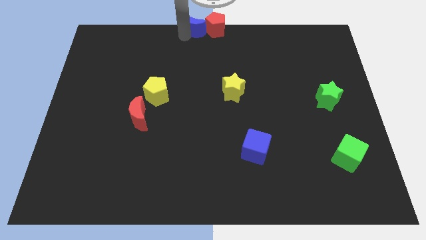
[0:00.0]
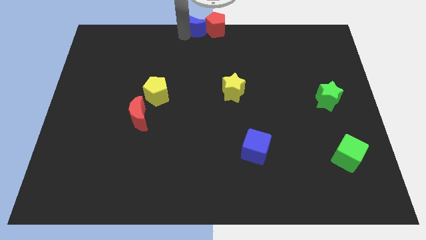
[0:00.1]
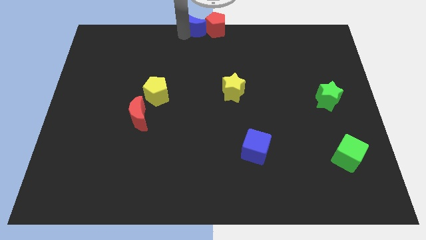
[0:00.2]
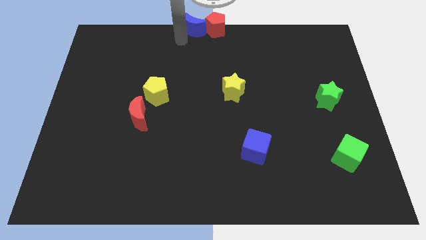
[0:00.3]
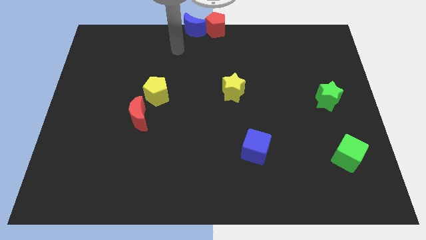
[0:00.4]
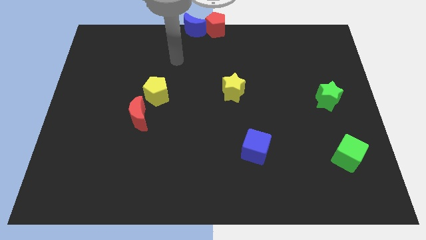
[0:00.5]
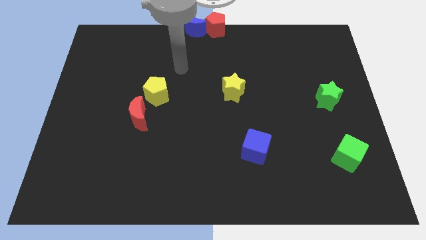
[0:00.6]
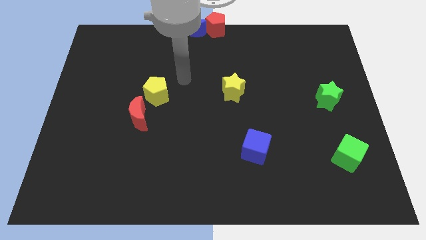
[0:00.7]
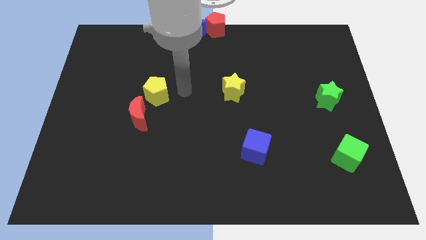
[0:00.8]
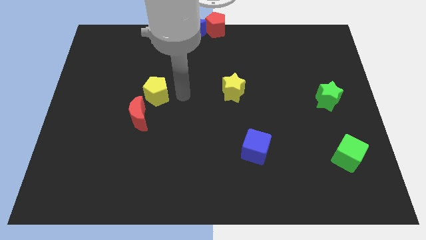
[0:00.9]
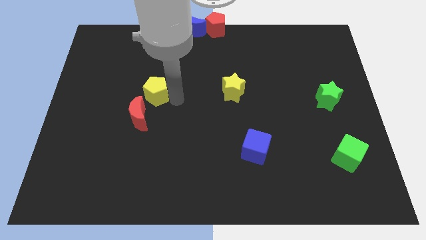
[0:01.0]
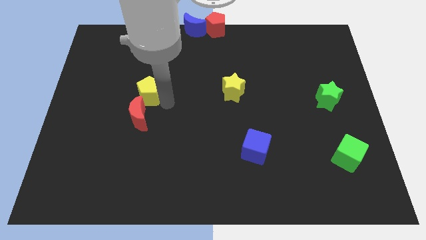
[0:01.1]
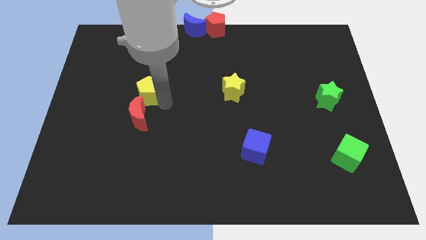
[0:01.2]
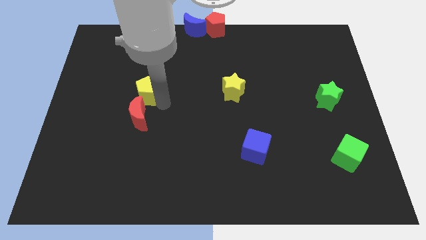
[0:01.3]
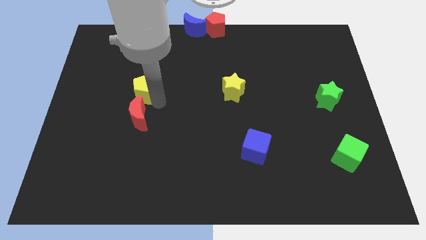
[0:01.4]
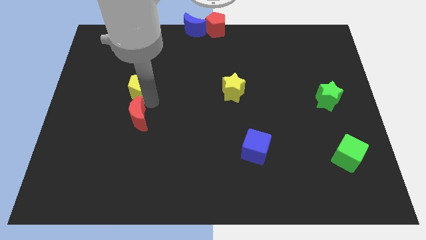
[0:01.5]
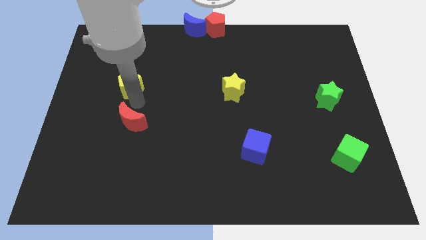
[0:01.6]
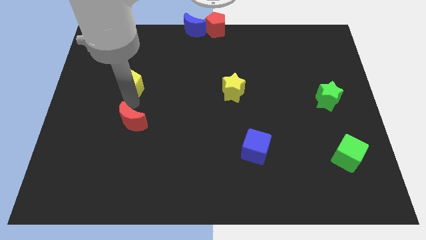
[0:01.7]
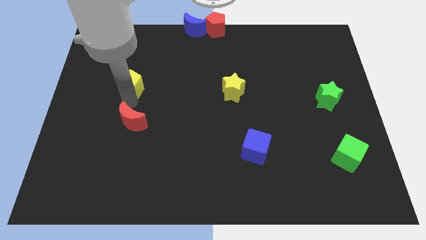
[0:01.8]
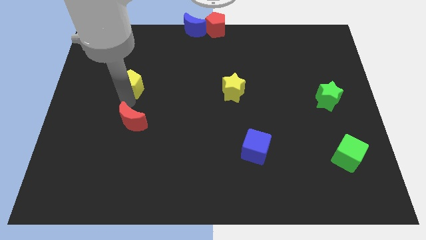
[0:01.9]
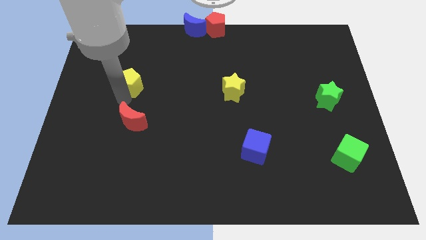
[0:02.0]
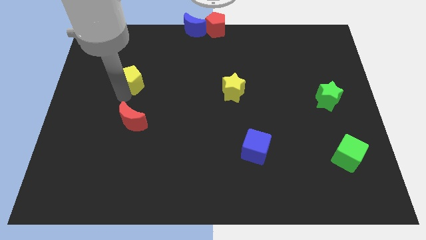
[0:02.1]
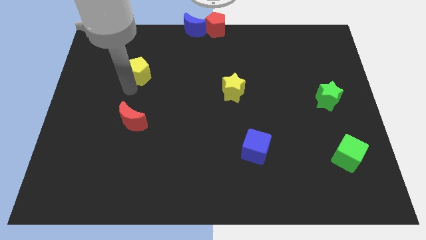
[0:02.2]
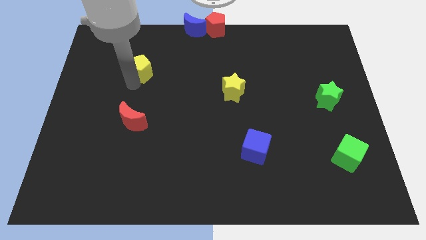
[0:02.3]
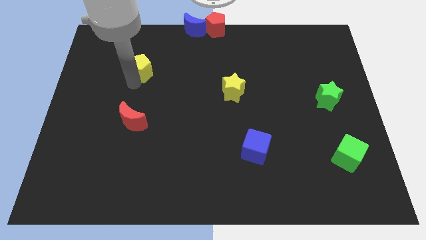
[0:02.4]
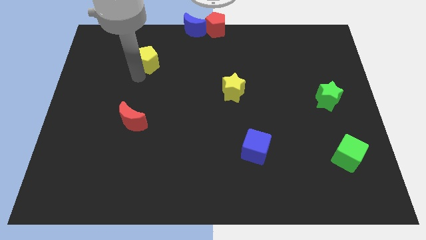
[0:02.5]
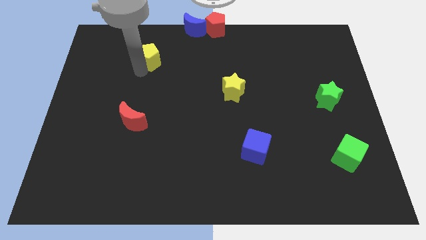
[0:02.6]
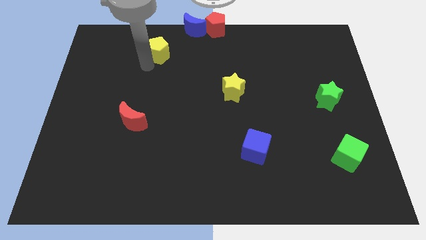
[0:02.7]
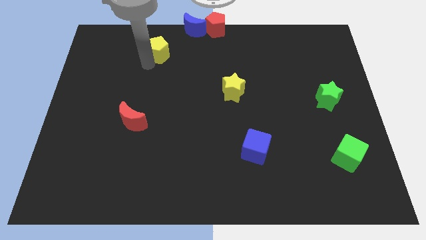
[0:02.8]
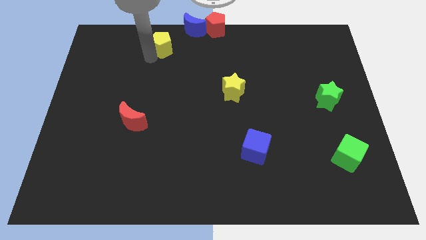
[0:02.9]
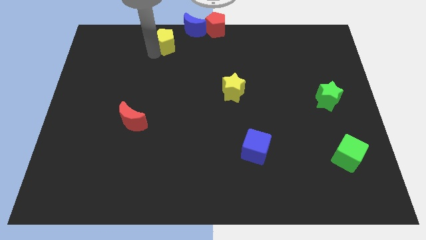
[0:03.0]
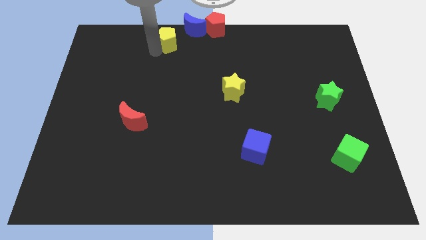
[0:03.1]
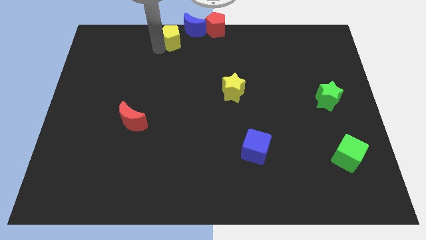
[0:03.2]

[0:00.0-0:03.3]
separate yellow pentagon and red moon

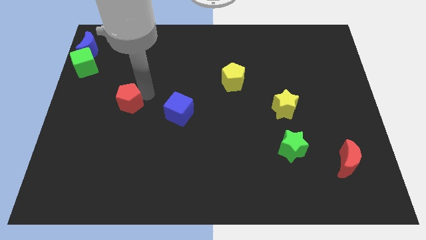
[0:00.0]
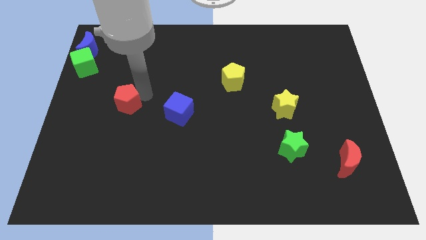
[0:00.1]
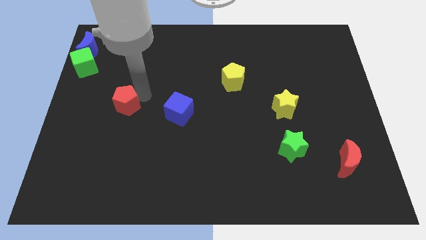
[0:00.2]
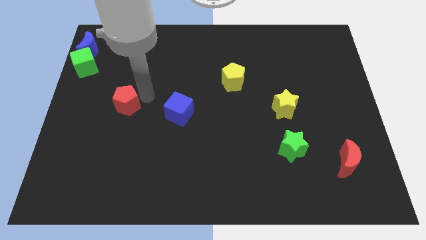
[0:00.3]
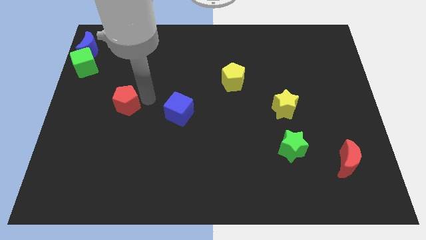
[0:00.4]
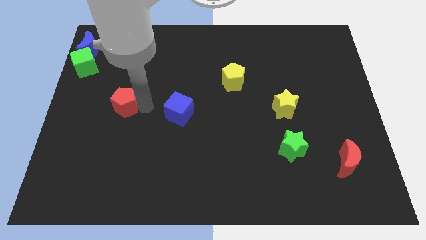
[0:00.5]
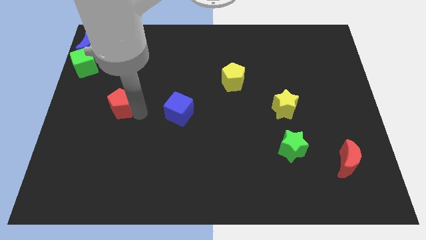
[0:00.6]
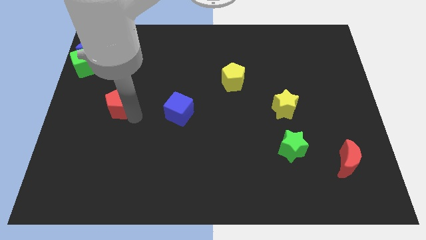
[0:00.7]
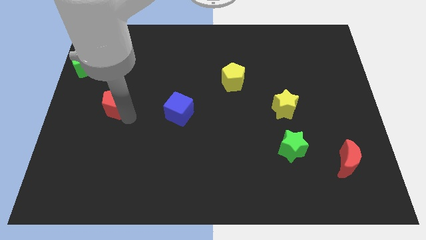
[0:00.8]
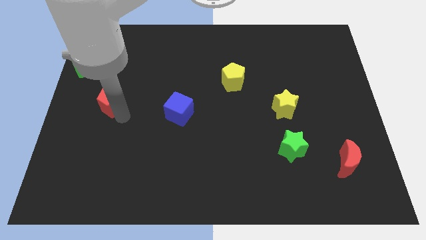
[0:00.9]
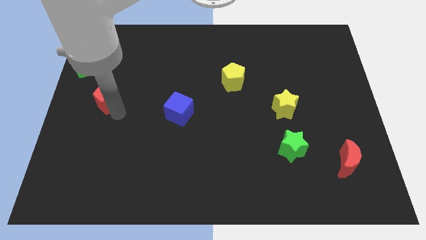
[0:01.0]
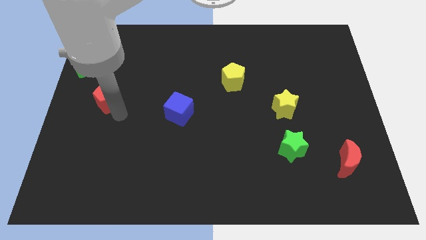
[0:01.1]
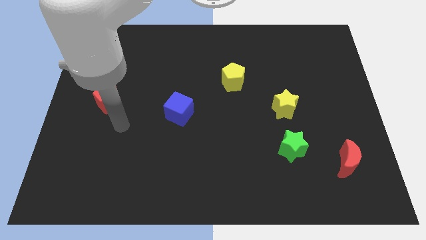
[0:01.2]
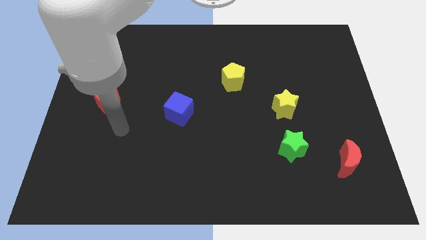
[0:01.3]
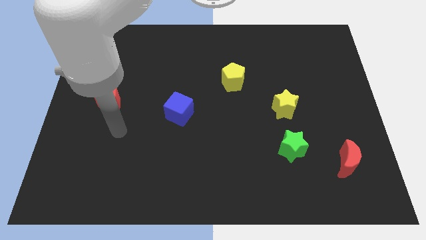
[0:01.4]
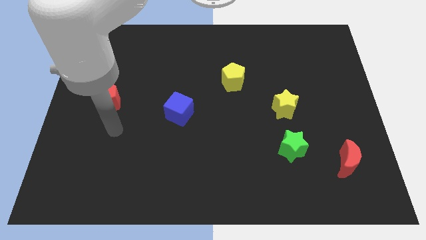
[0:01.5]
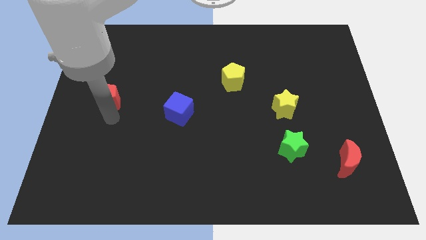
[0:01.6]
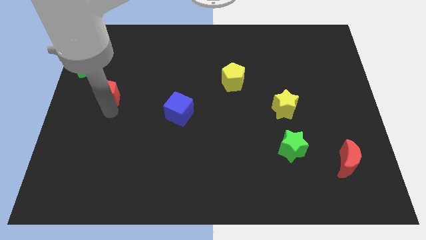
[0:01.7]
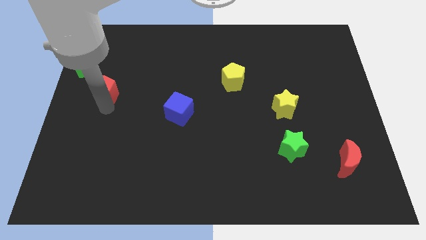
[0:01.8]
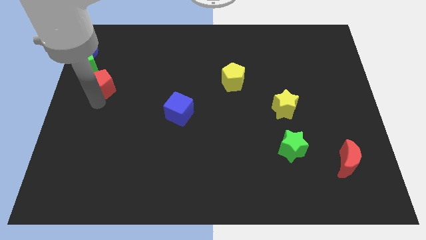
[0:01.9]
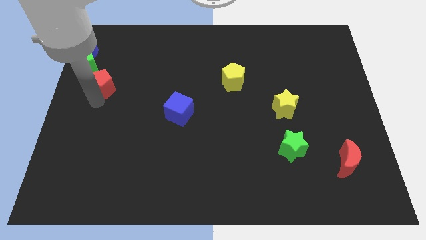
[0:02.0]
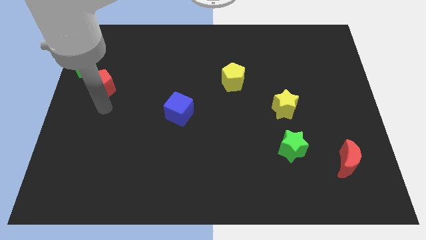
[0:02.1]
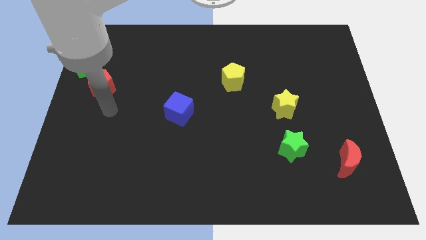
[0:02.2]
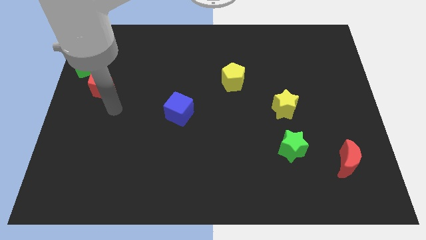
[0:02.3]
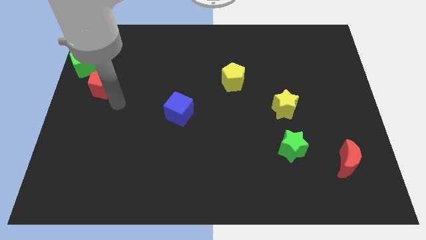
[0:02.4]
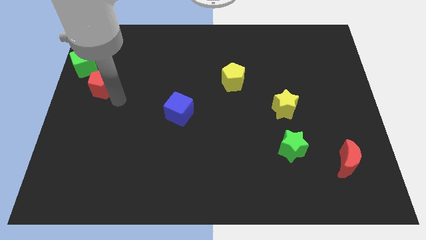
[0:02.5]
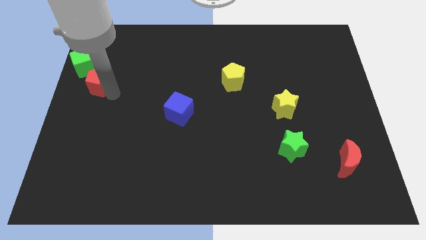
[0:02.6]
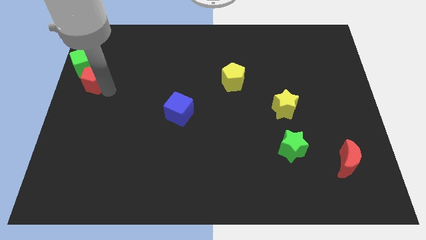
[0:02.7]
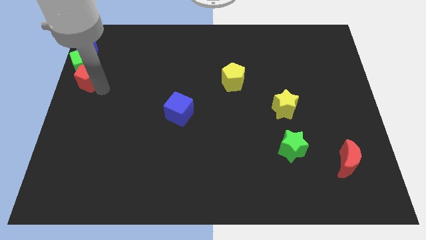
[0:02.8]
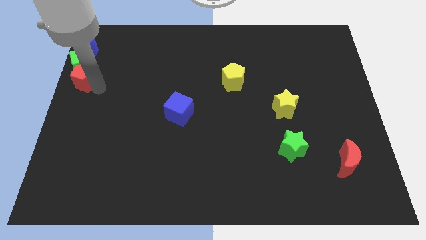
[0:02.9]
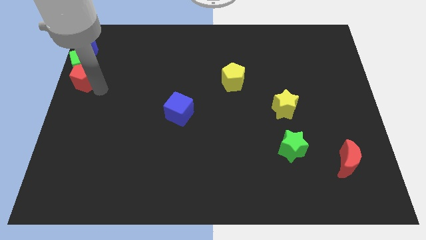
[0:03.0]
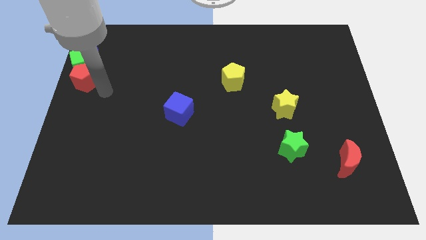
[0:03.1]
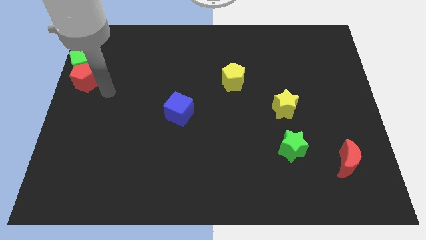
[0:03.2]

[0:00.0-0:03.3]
move the red pentagon to the bottom of the green cube

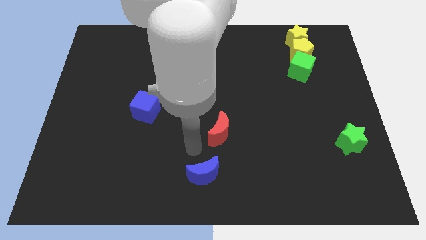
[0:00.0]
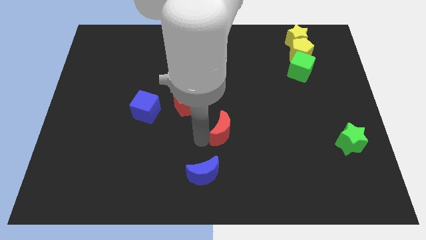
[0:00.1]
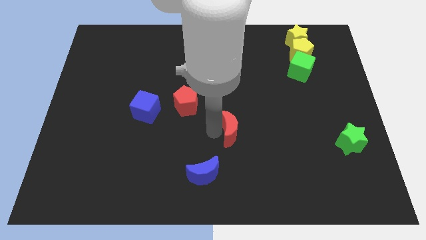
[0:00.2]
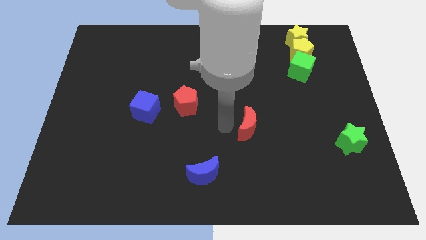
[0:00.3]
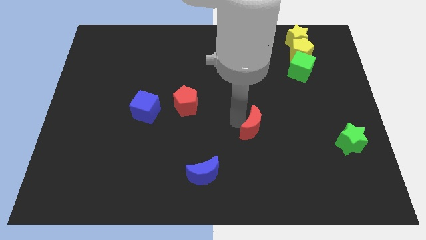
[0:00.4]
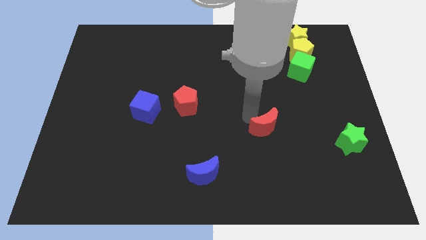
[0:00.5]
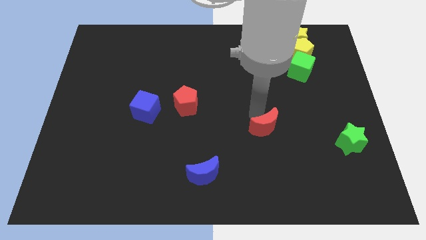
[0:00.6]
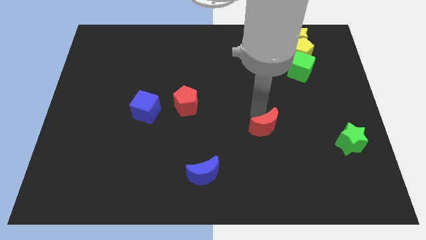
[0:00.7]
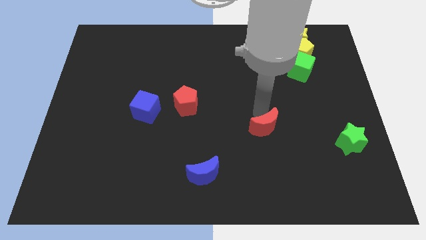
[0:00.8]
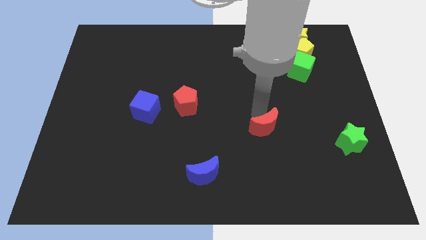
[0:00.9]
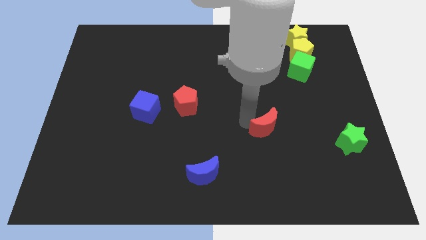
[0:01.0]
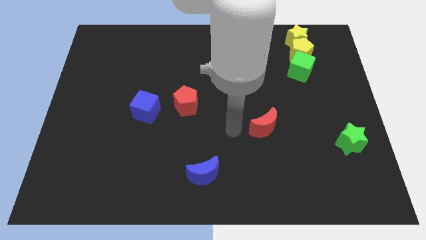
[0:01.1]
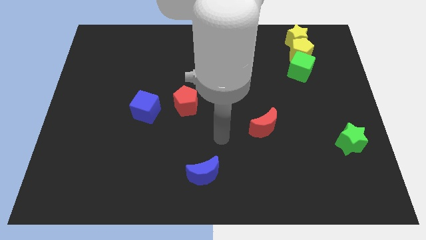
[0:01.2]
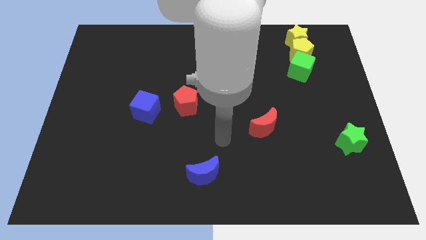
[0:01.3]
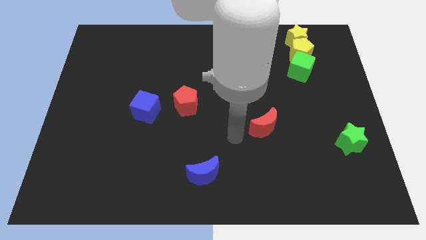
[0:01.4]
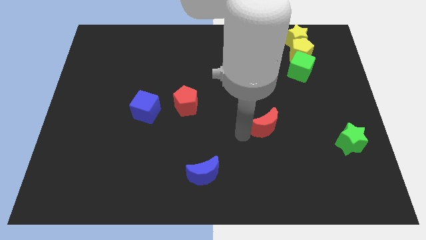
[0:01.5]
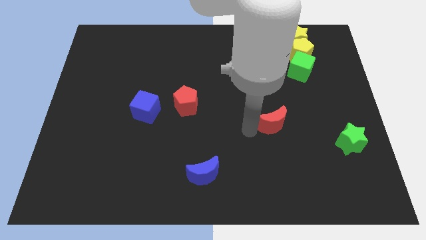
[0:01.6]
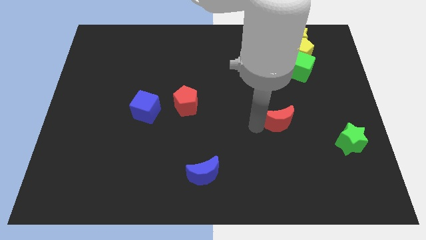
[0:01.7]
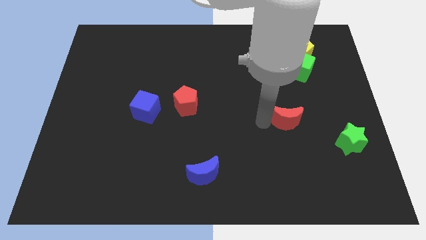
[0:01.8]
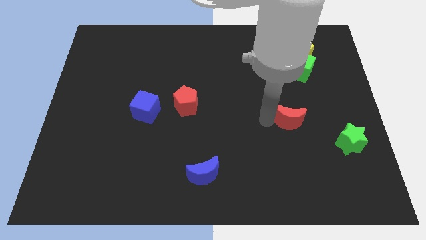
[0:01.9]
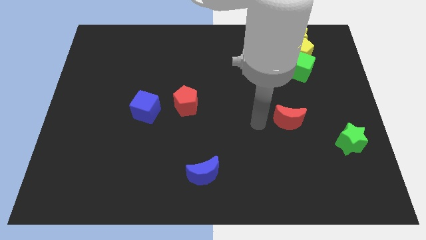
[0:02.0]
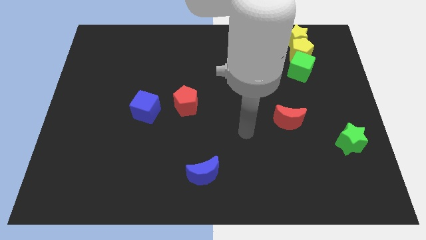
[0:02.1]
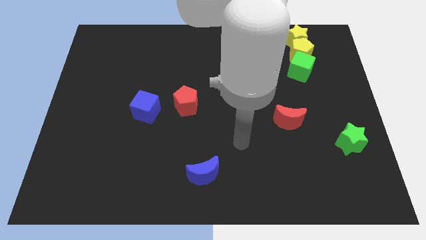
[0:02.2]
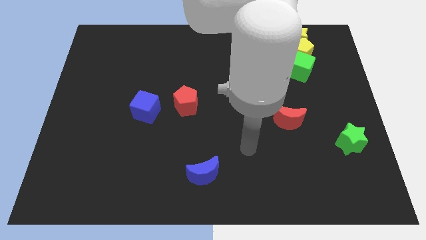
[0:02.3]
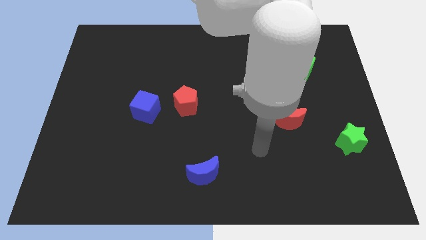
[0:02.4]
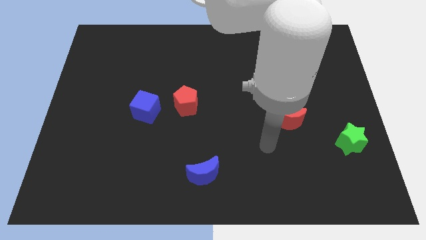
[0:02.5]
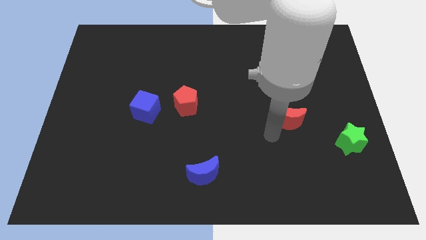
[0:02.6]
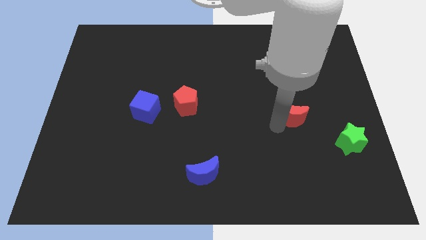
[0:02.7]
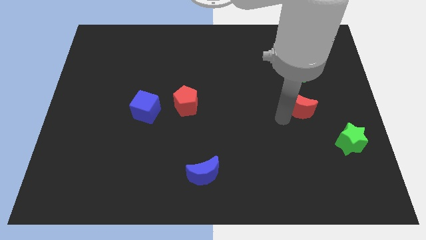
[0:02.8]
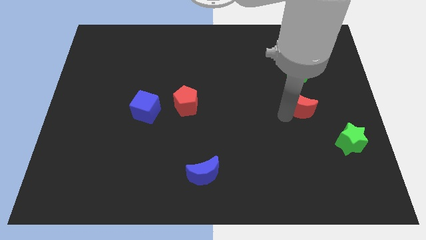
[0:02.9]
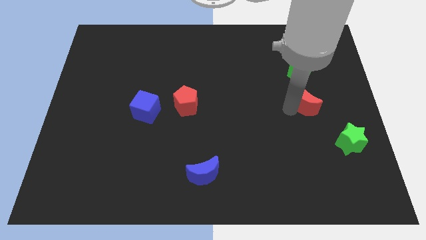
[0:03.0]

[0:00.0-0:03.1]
push the red moon vertically below the green cube
